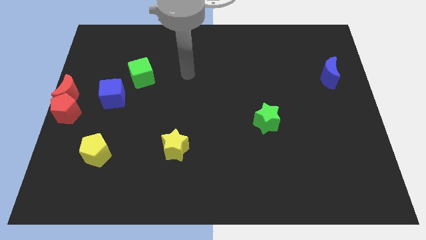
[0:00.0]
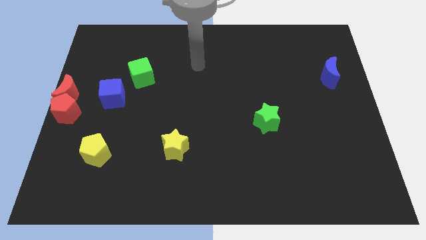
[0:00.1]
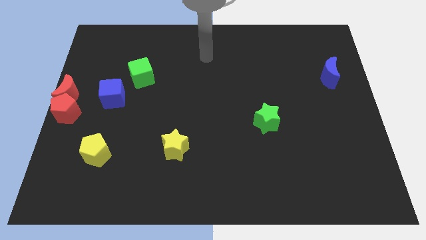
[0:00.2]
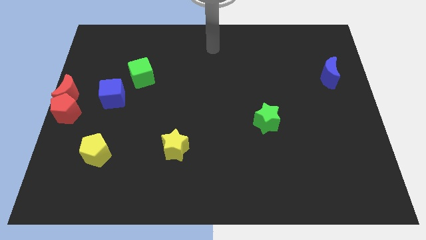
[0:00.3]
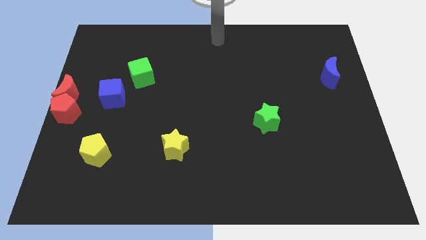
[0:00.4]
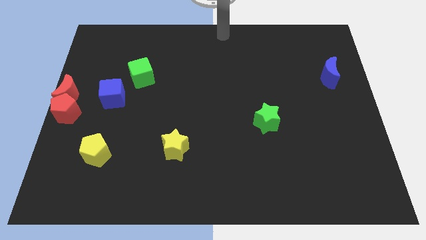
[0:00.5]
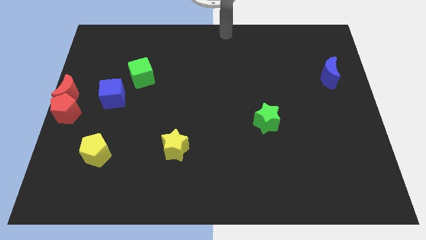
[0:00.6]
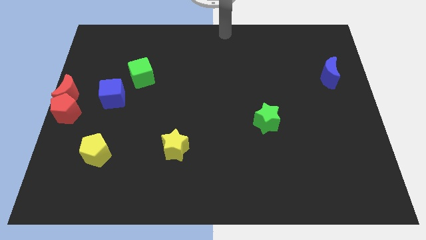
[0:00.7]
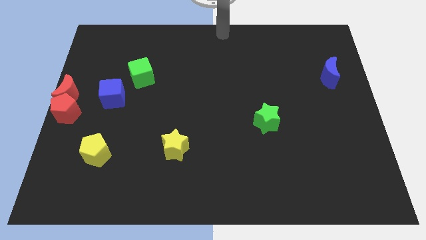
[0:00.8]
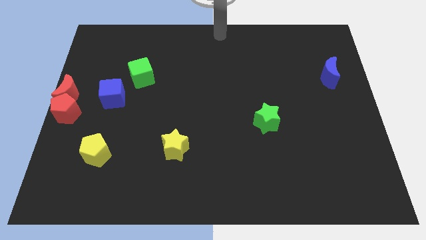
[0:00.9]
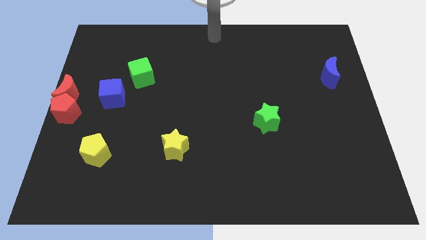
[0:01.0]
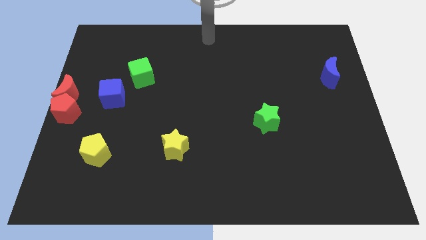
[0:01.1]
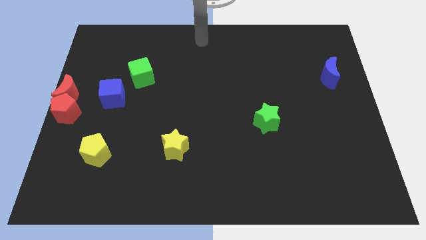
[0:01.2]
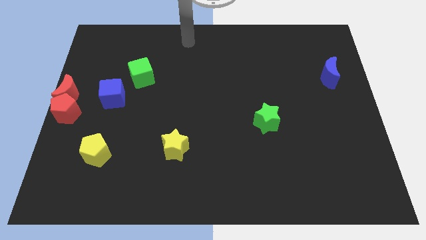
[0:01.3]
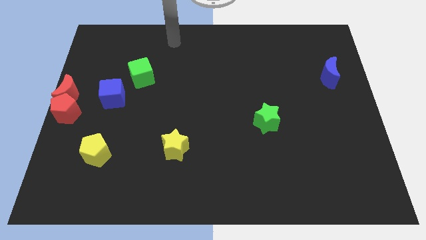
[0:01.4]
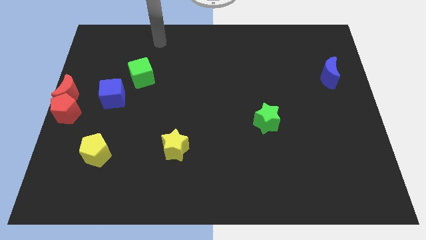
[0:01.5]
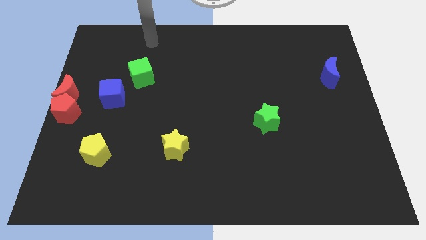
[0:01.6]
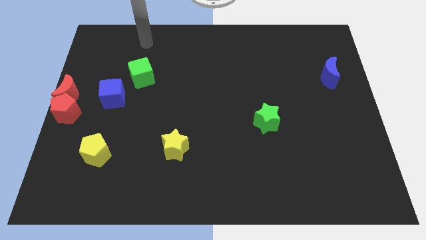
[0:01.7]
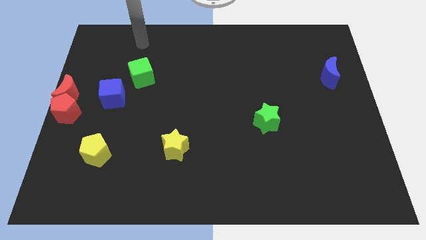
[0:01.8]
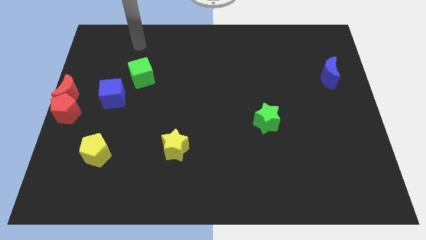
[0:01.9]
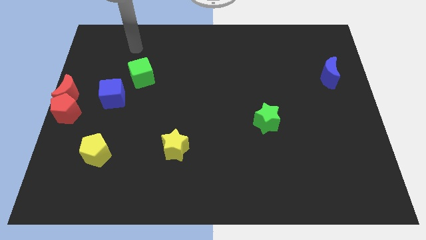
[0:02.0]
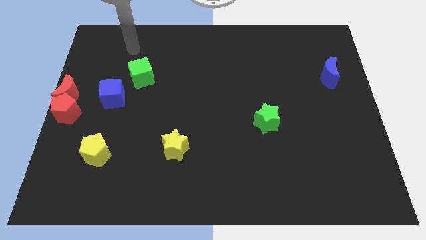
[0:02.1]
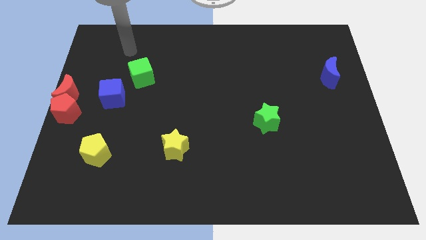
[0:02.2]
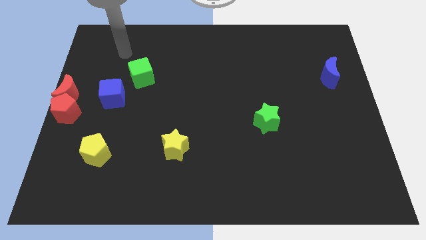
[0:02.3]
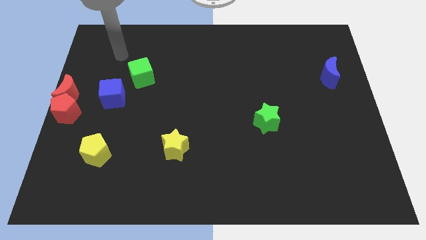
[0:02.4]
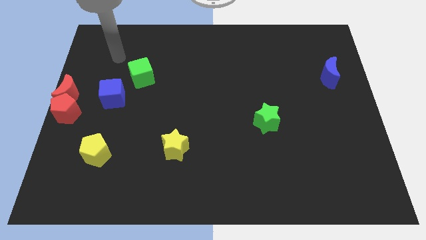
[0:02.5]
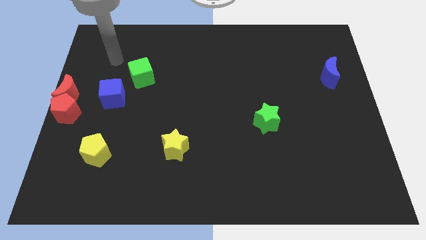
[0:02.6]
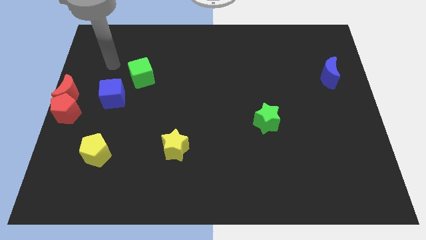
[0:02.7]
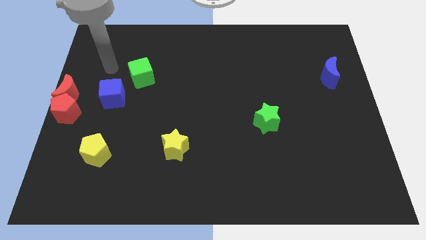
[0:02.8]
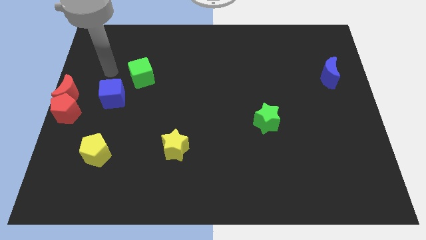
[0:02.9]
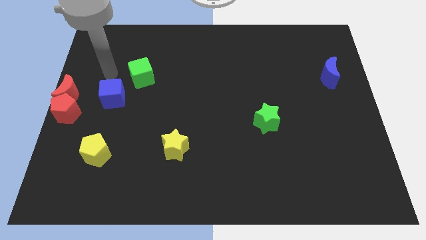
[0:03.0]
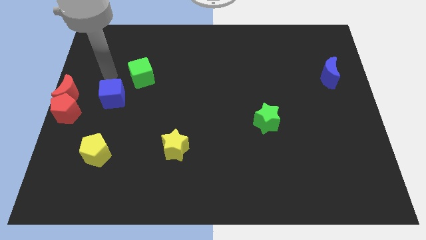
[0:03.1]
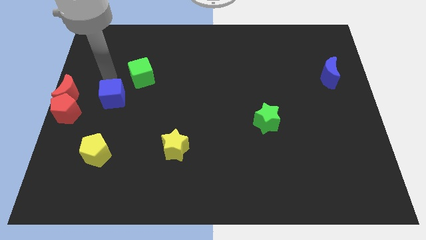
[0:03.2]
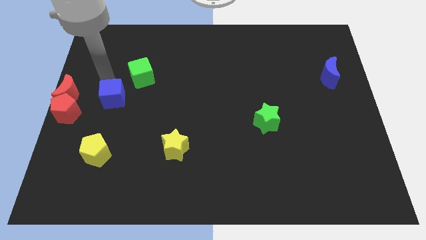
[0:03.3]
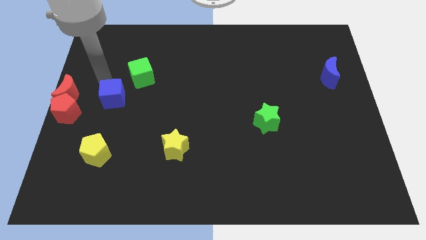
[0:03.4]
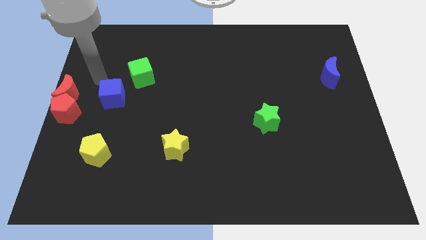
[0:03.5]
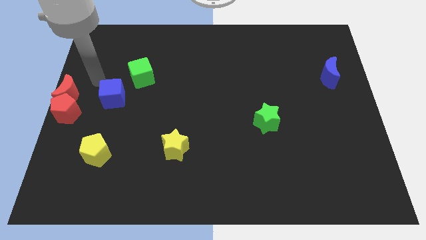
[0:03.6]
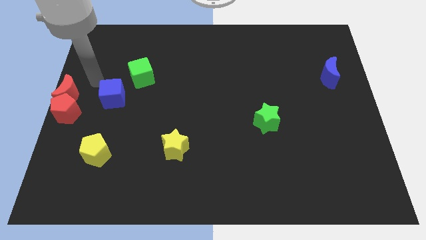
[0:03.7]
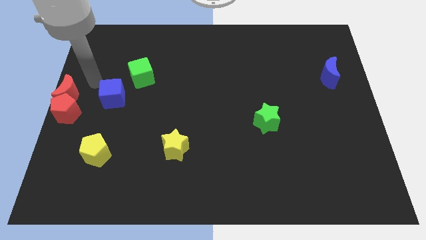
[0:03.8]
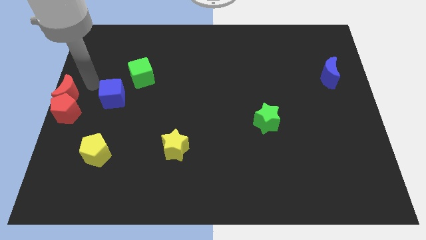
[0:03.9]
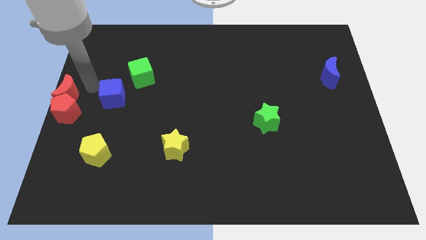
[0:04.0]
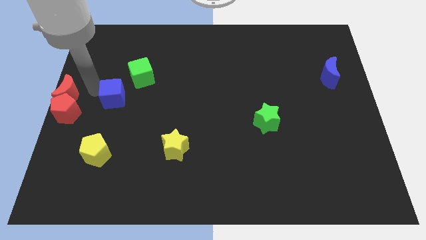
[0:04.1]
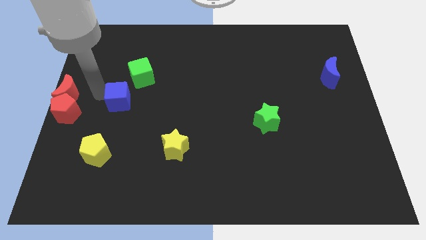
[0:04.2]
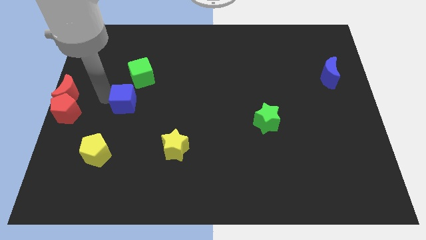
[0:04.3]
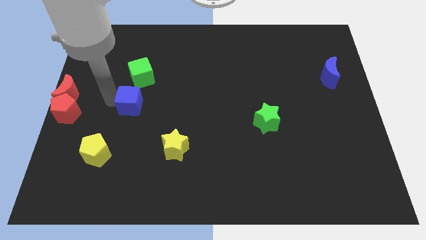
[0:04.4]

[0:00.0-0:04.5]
move arm to the blue cube

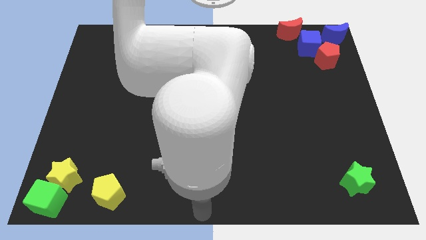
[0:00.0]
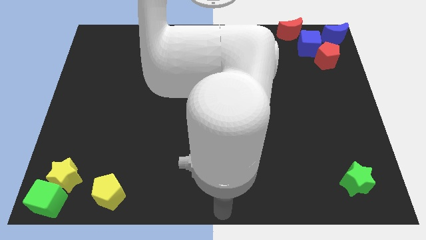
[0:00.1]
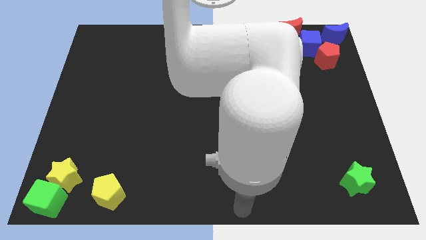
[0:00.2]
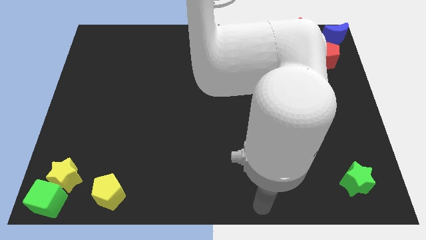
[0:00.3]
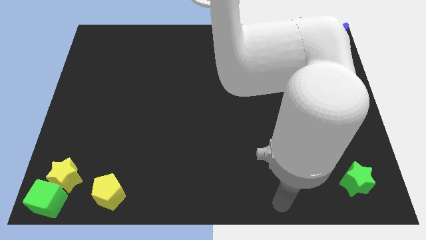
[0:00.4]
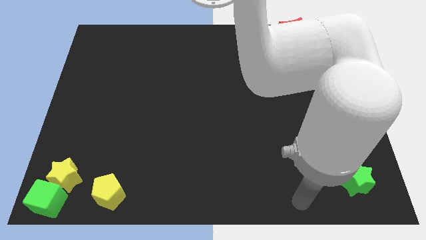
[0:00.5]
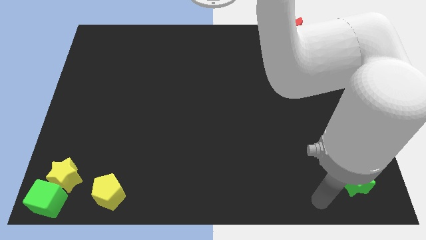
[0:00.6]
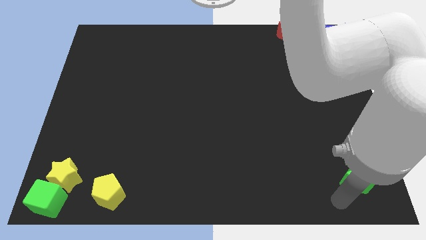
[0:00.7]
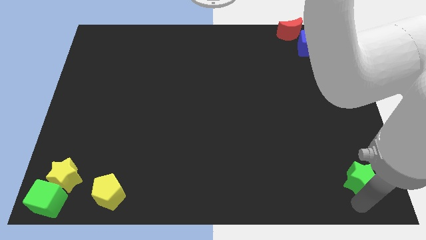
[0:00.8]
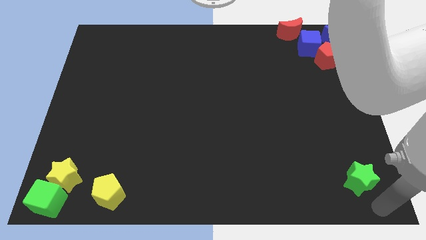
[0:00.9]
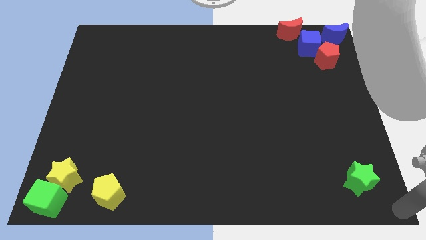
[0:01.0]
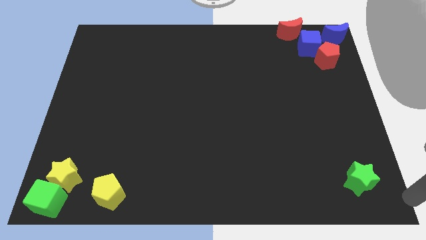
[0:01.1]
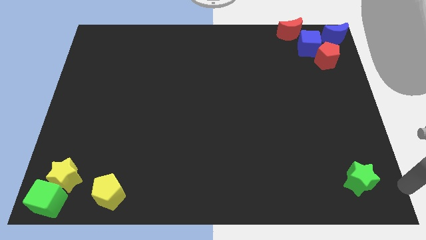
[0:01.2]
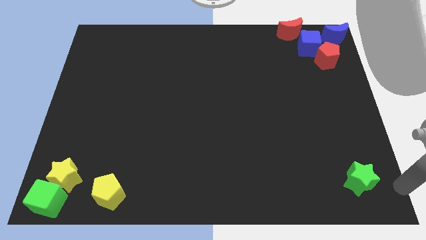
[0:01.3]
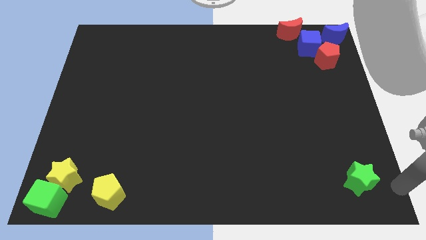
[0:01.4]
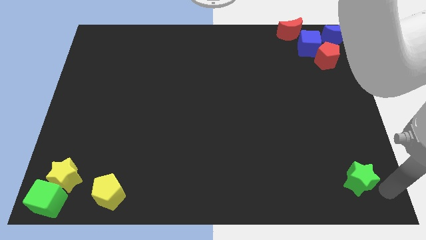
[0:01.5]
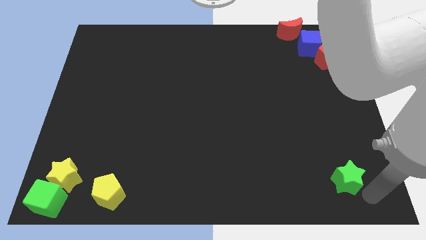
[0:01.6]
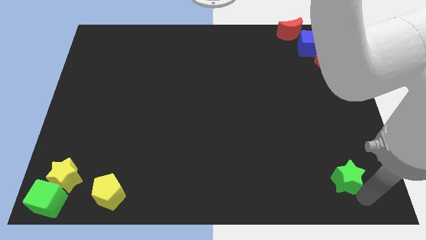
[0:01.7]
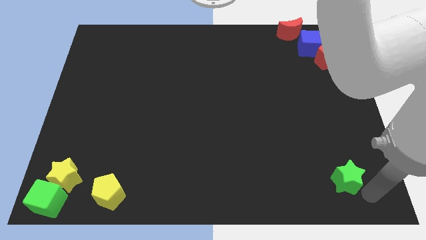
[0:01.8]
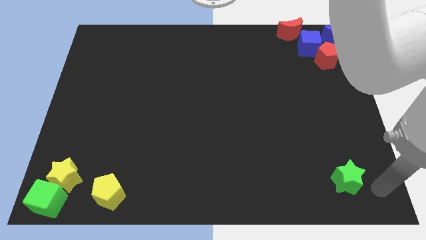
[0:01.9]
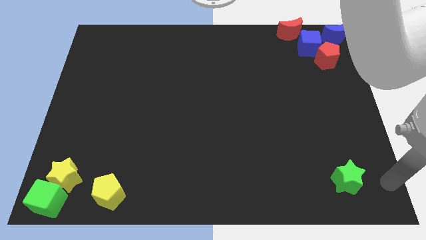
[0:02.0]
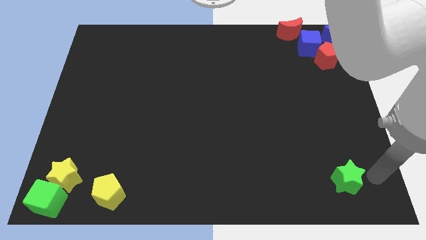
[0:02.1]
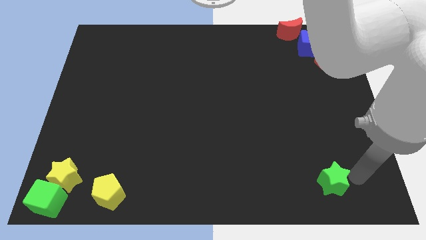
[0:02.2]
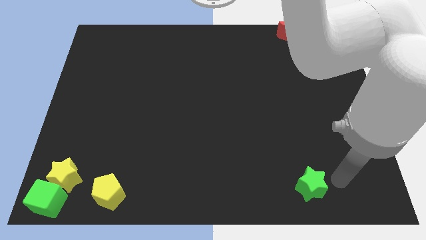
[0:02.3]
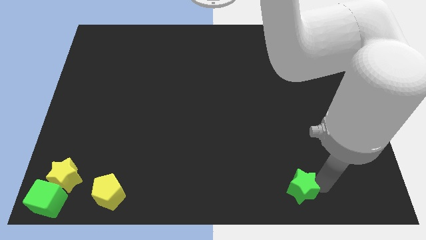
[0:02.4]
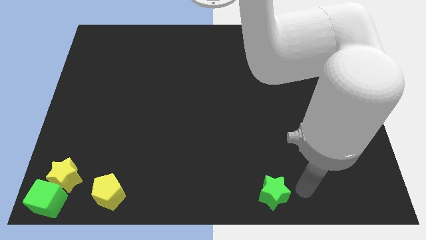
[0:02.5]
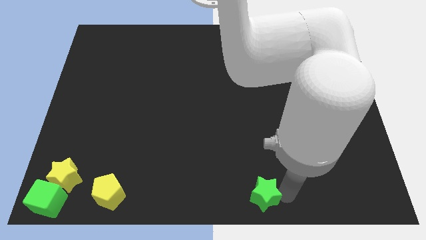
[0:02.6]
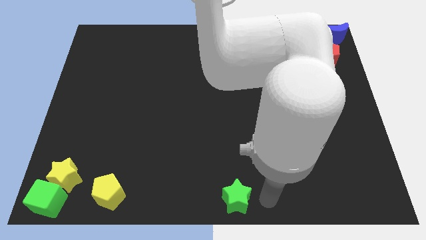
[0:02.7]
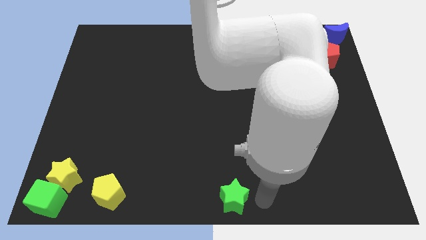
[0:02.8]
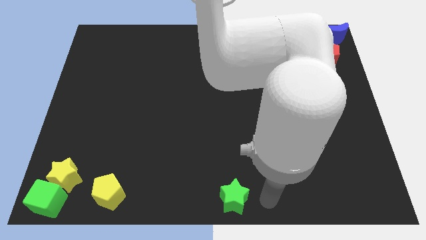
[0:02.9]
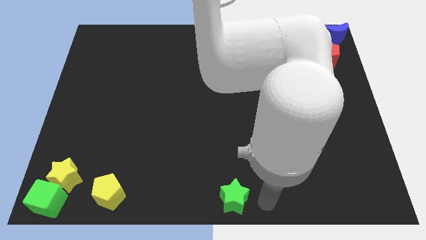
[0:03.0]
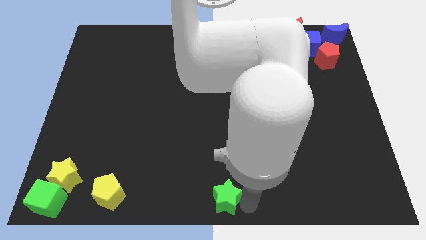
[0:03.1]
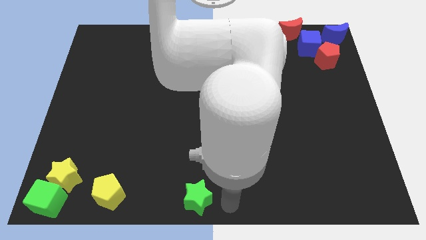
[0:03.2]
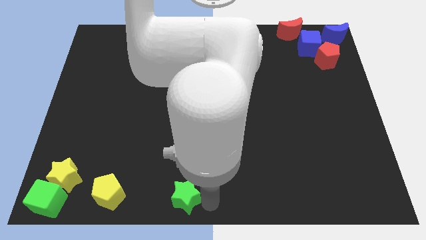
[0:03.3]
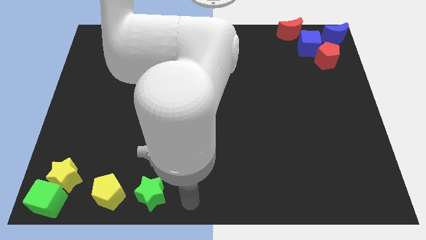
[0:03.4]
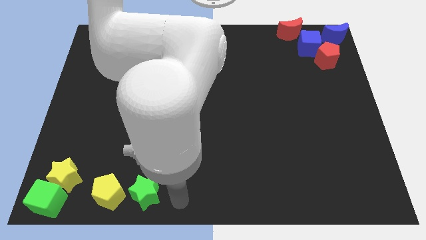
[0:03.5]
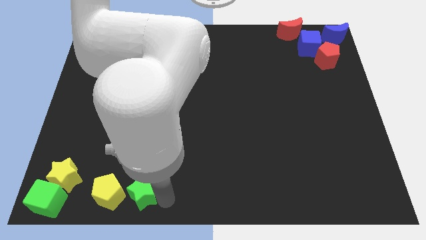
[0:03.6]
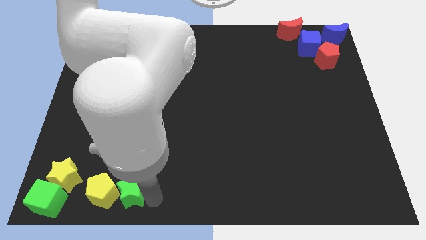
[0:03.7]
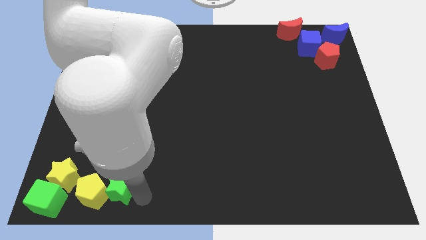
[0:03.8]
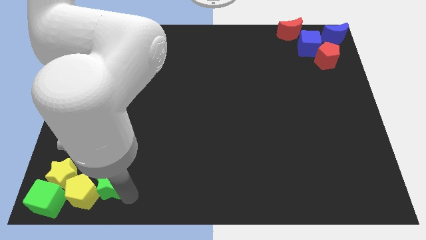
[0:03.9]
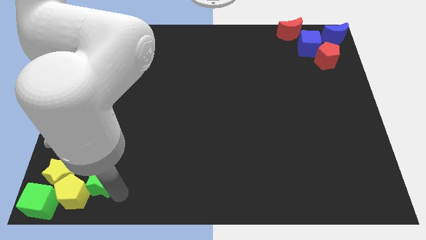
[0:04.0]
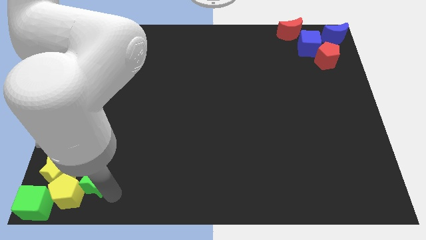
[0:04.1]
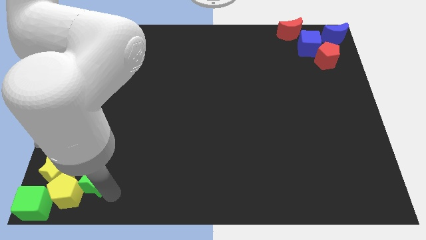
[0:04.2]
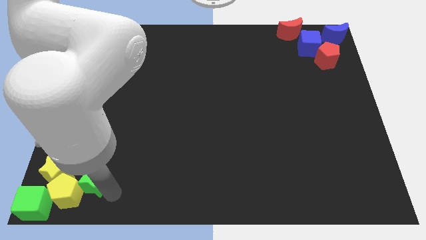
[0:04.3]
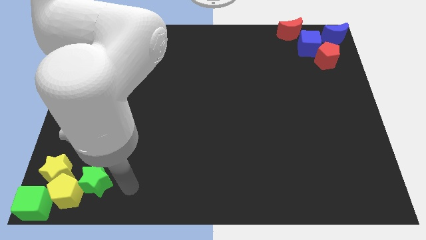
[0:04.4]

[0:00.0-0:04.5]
move the green star into the yellow blocks to form a group of yellow and green blocks
